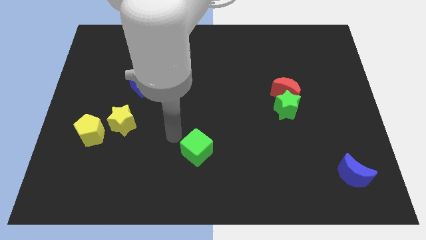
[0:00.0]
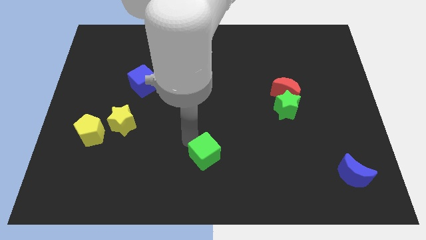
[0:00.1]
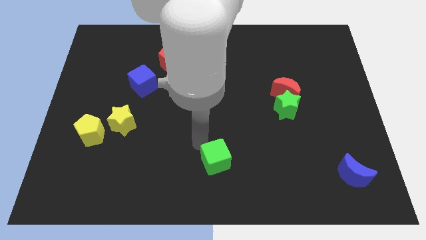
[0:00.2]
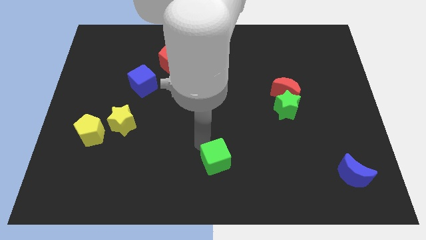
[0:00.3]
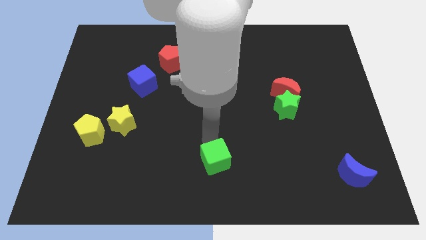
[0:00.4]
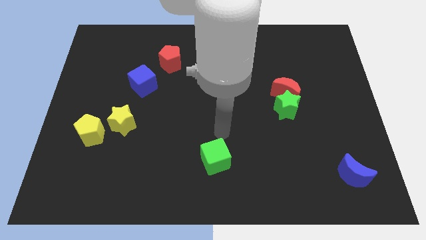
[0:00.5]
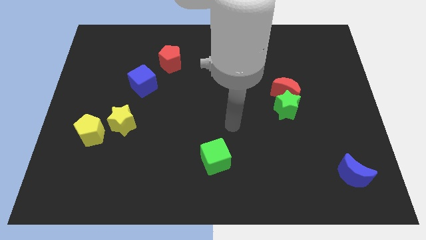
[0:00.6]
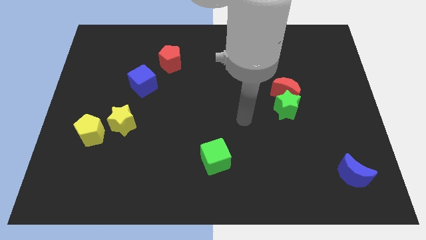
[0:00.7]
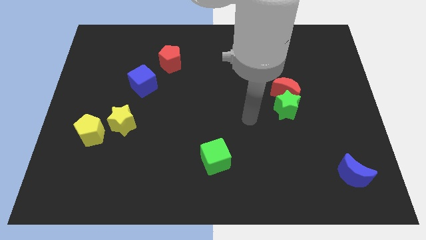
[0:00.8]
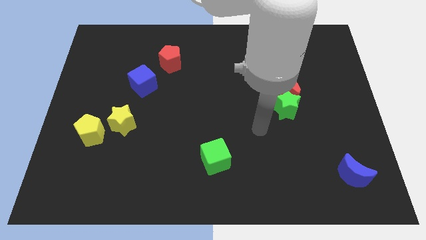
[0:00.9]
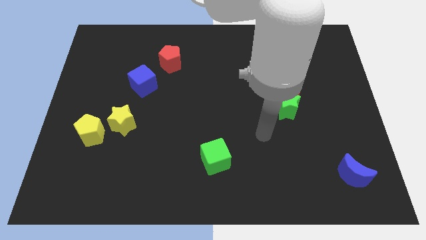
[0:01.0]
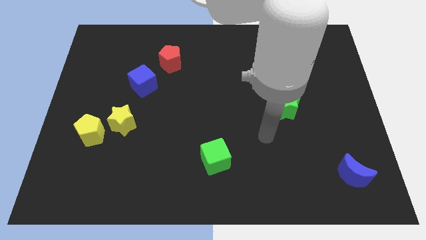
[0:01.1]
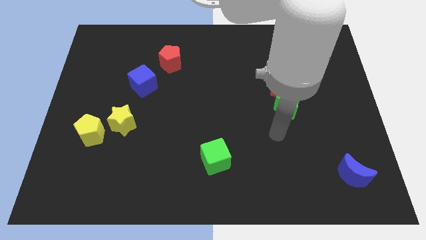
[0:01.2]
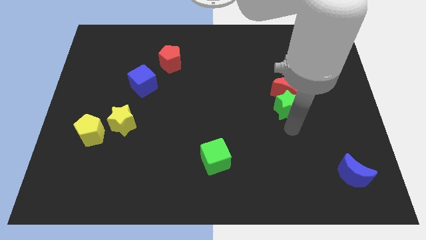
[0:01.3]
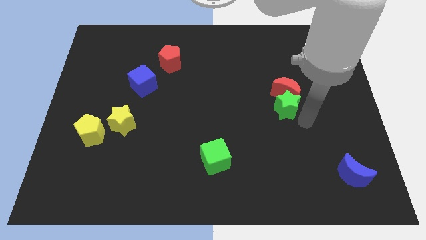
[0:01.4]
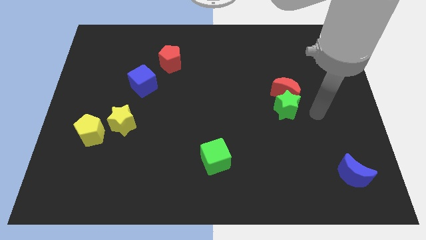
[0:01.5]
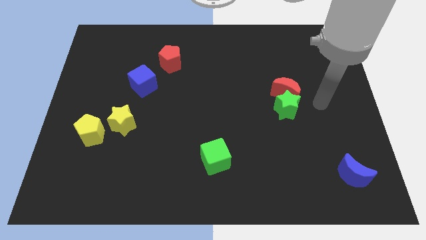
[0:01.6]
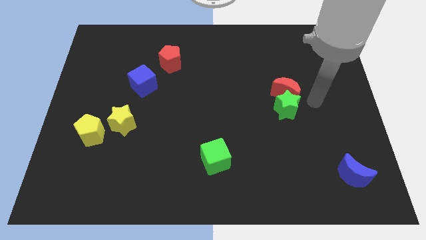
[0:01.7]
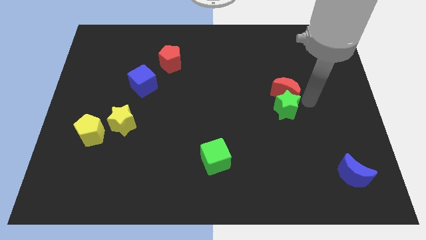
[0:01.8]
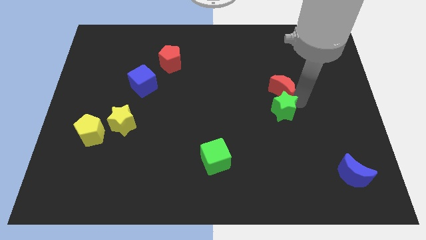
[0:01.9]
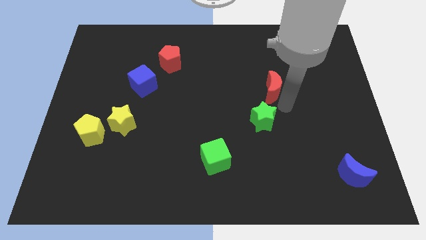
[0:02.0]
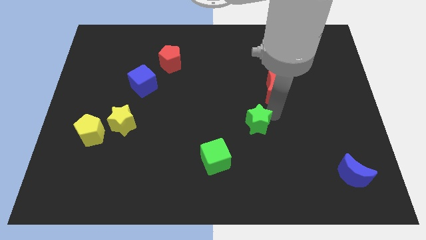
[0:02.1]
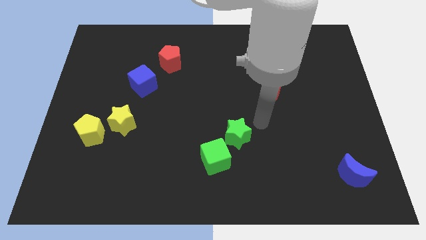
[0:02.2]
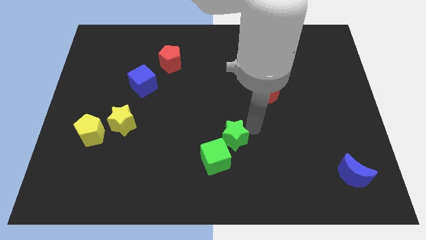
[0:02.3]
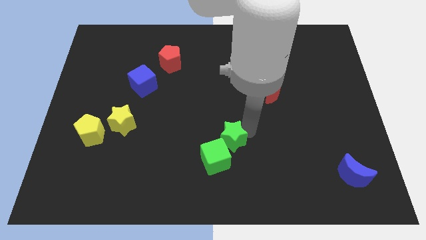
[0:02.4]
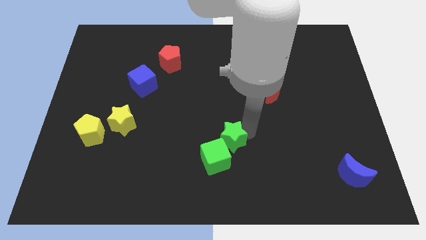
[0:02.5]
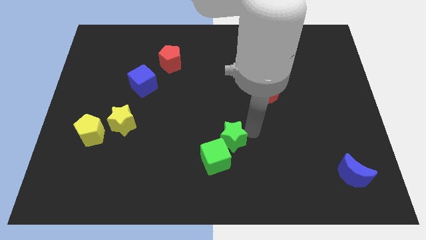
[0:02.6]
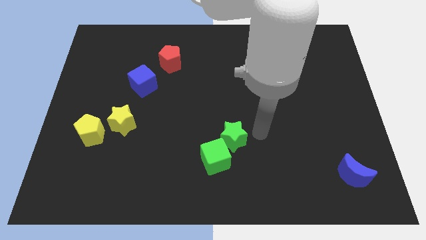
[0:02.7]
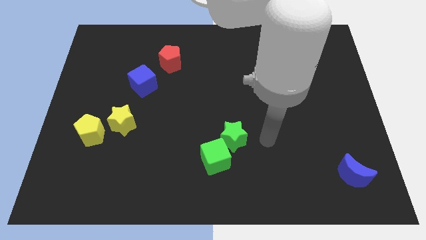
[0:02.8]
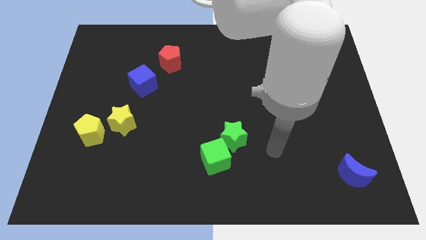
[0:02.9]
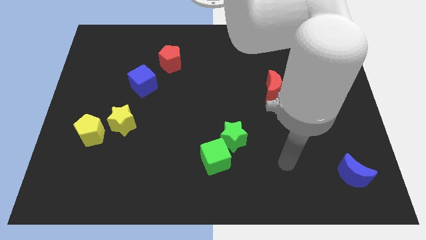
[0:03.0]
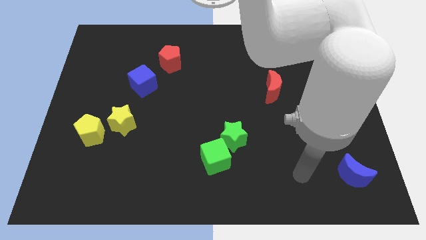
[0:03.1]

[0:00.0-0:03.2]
place both the green blocks at the bottom

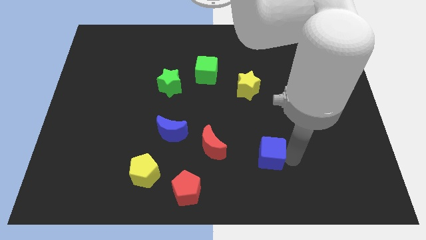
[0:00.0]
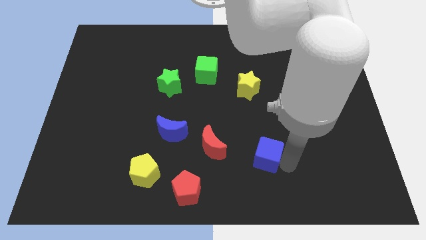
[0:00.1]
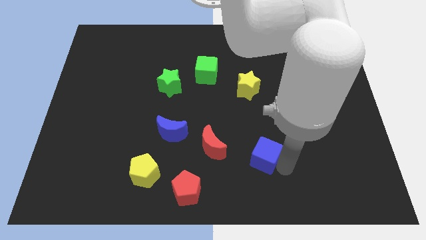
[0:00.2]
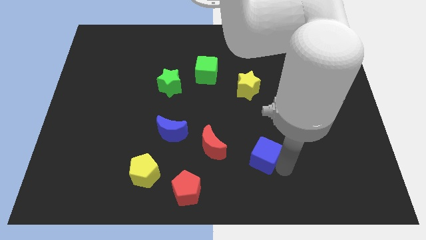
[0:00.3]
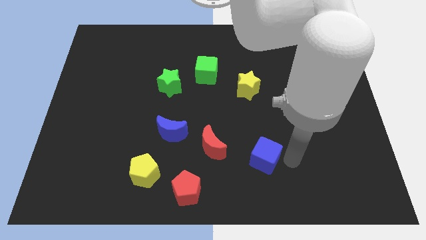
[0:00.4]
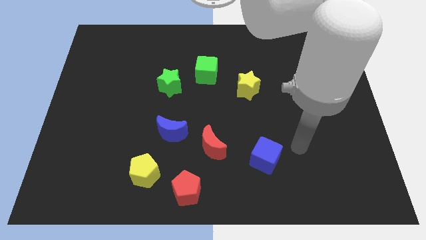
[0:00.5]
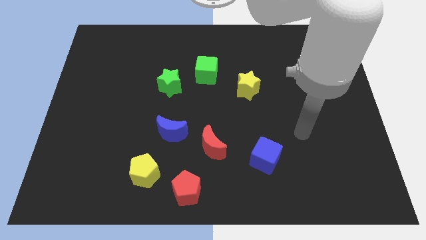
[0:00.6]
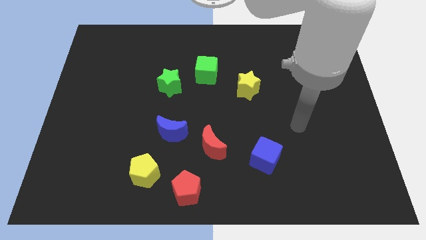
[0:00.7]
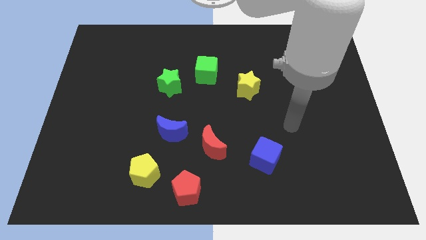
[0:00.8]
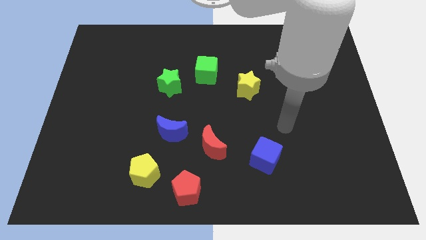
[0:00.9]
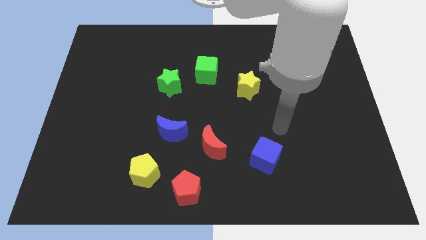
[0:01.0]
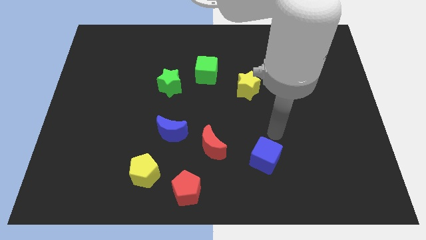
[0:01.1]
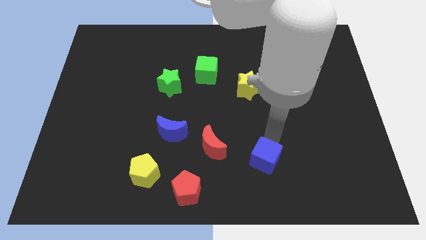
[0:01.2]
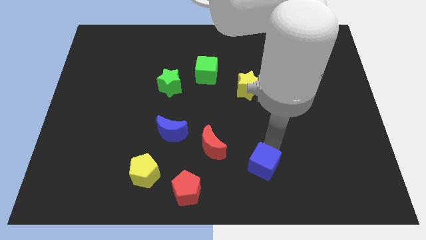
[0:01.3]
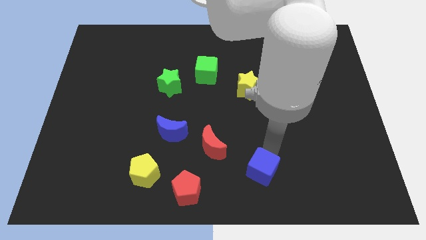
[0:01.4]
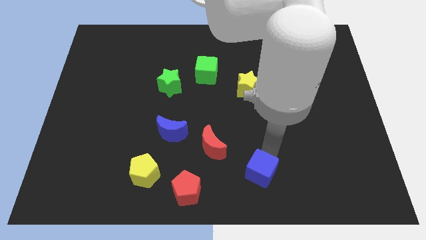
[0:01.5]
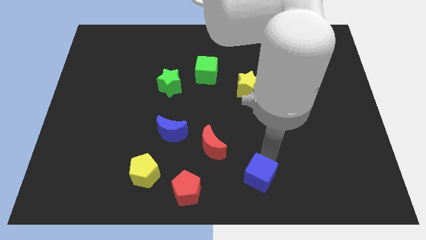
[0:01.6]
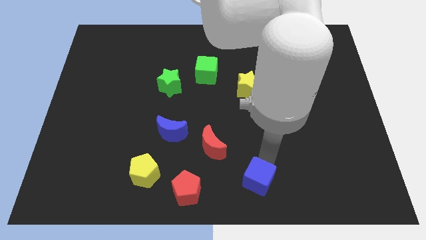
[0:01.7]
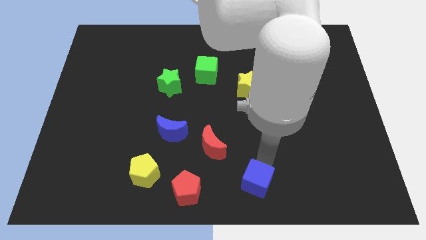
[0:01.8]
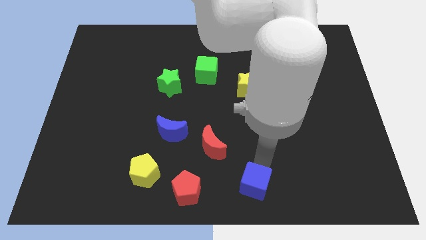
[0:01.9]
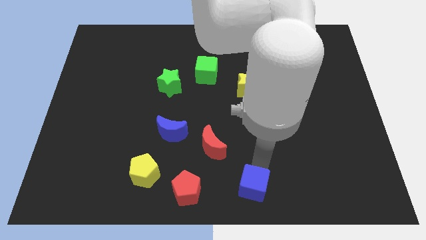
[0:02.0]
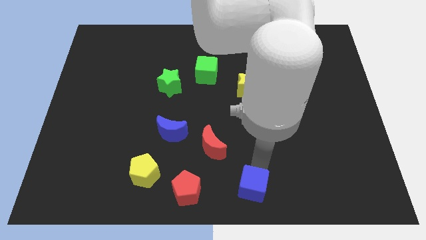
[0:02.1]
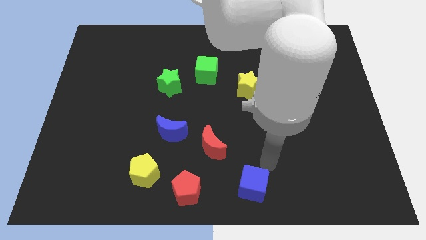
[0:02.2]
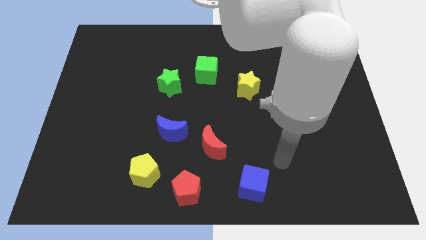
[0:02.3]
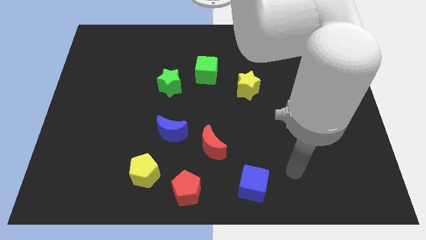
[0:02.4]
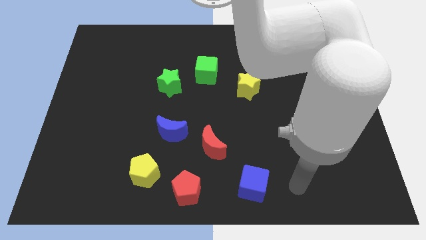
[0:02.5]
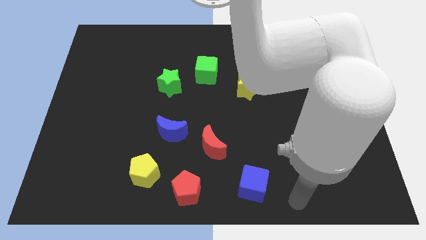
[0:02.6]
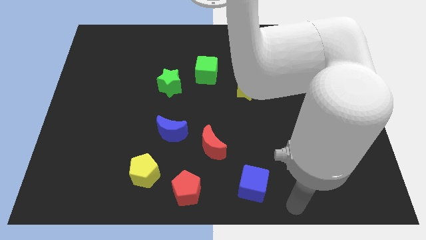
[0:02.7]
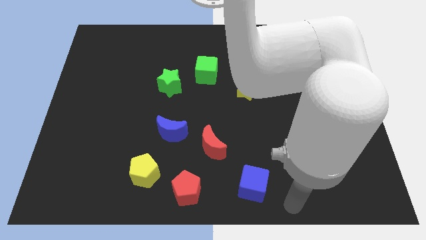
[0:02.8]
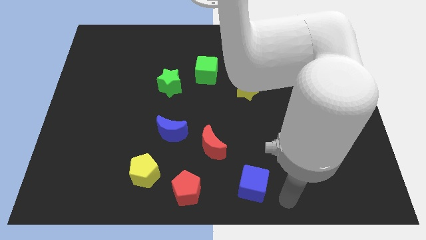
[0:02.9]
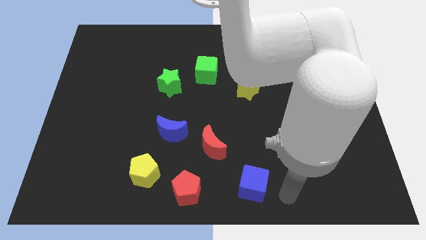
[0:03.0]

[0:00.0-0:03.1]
push the blue cube towards the bottom center of the board

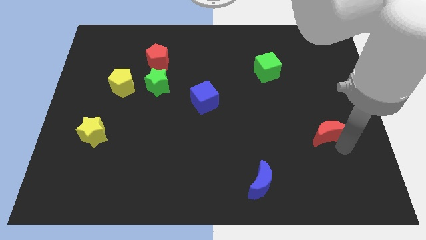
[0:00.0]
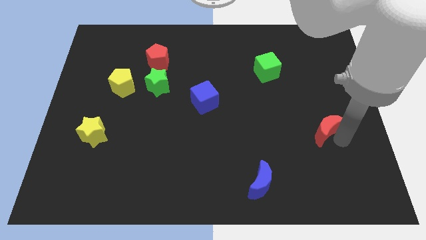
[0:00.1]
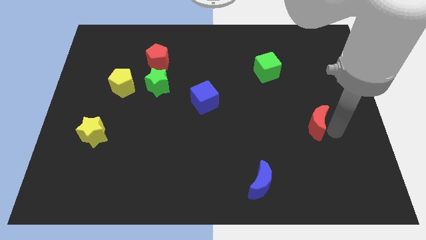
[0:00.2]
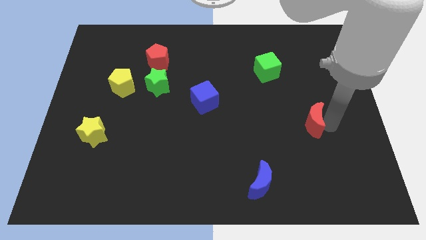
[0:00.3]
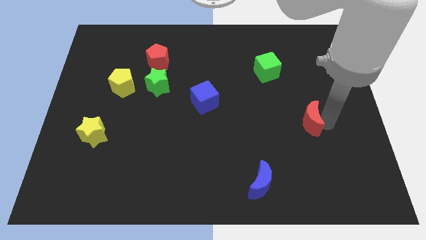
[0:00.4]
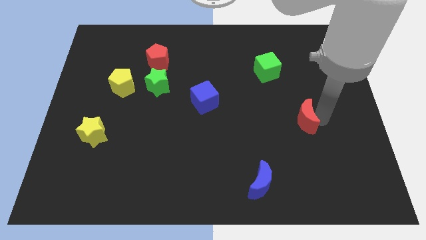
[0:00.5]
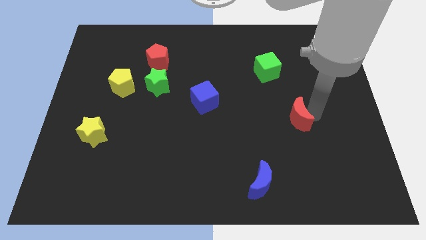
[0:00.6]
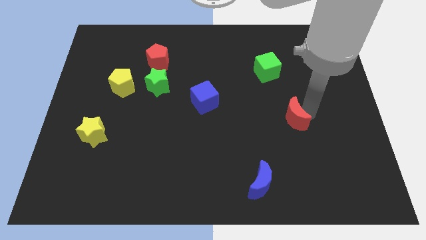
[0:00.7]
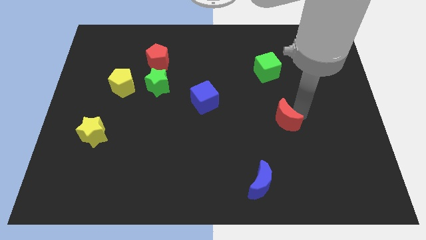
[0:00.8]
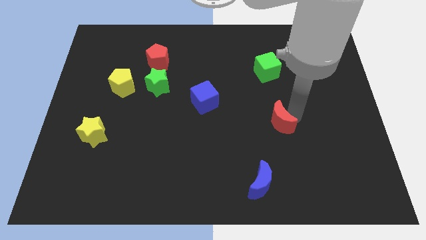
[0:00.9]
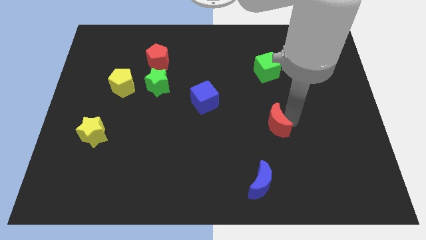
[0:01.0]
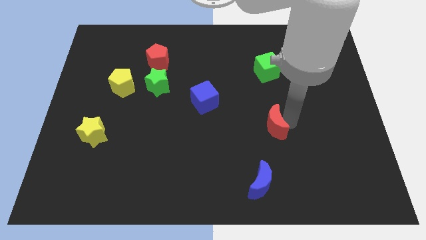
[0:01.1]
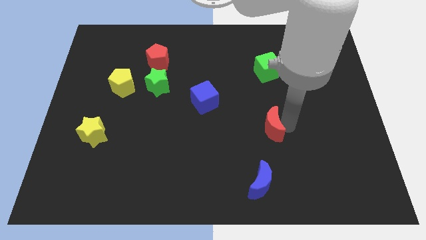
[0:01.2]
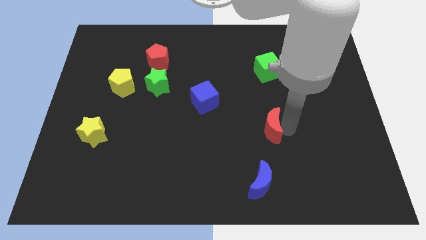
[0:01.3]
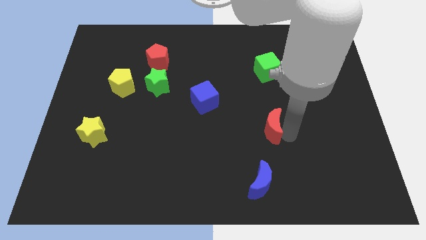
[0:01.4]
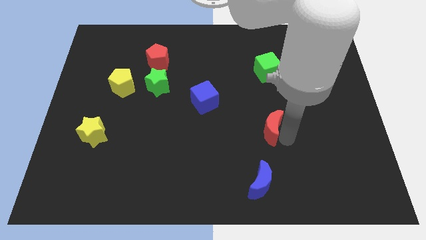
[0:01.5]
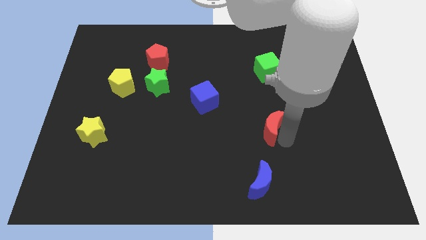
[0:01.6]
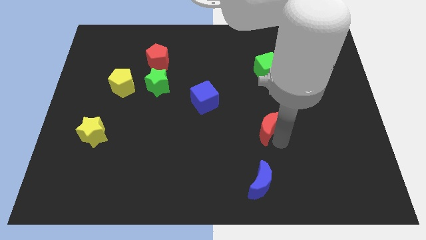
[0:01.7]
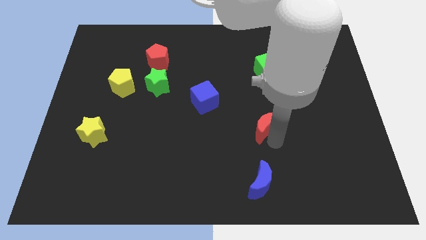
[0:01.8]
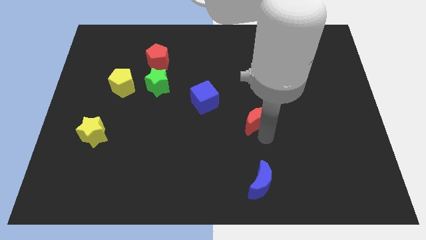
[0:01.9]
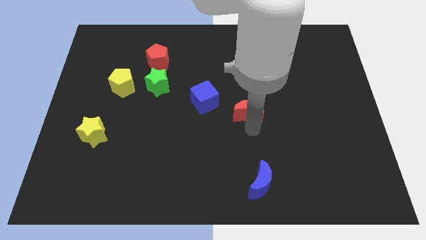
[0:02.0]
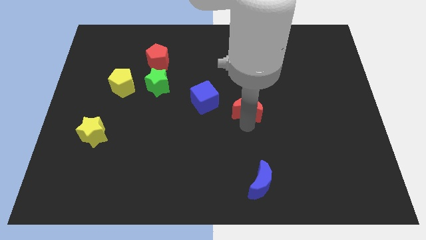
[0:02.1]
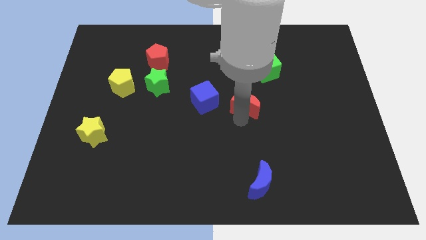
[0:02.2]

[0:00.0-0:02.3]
move the red moon to the right of the blue cube

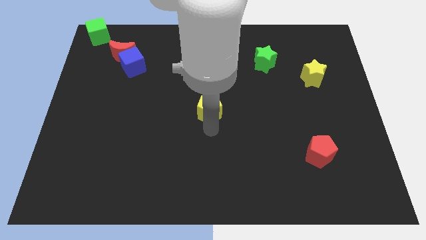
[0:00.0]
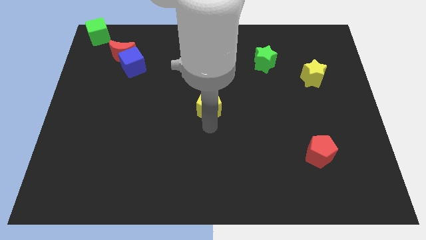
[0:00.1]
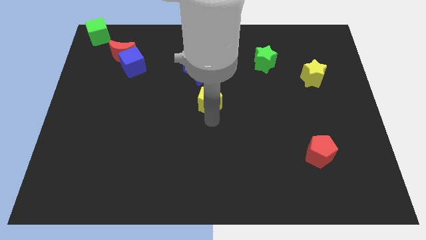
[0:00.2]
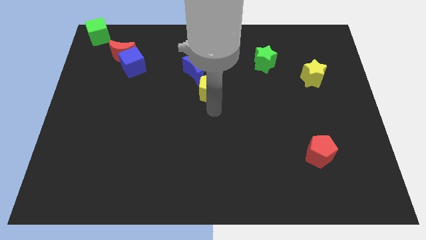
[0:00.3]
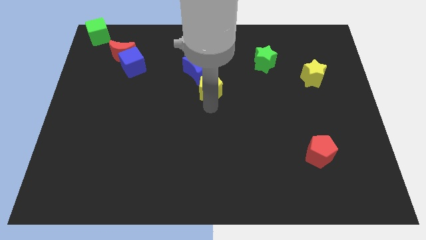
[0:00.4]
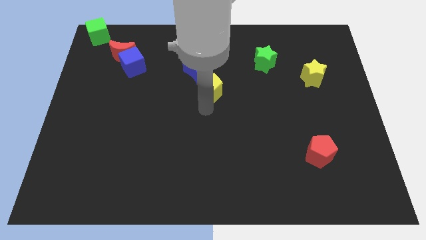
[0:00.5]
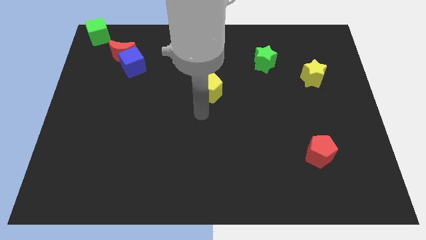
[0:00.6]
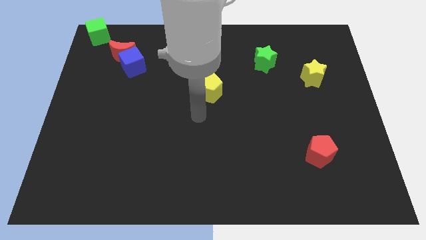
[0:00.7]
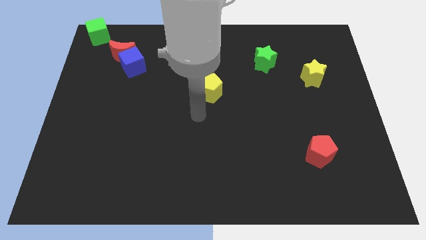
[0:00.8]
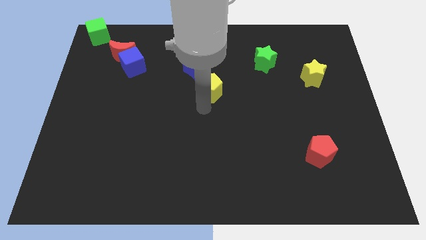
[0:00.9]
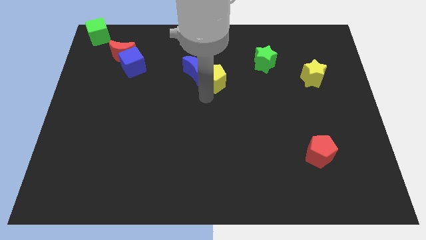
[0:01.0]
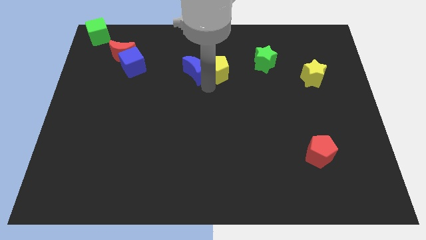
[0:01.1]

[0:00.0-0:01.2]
place the yellow pentagon right of blue crescent
